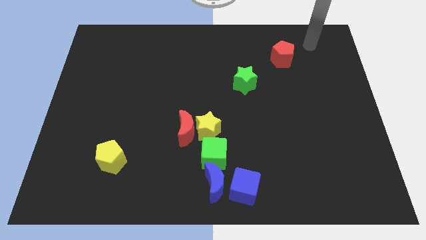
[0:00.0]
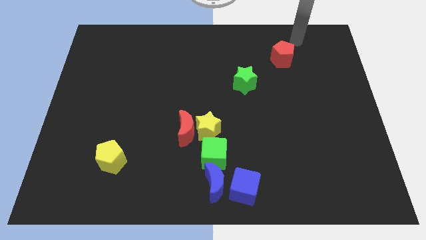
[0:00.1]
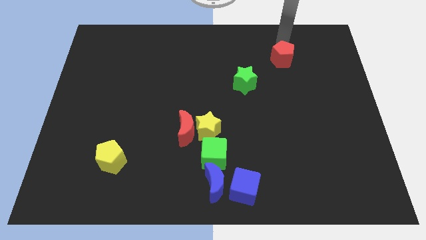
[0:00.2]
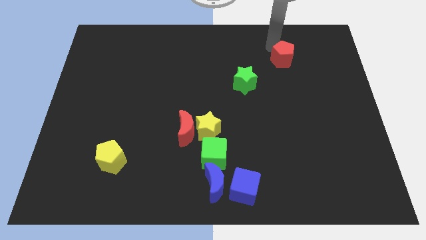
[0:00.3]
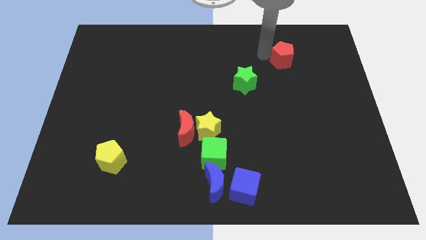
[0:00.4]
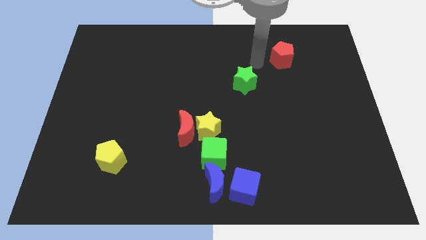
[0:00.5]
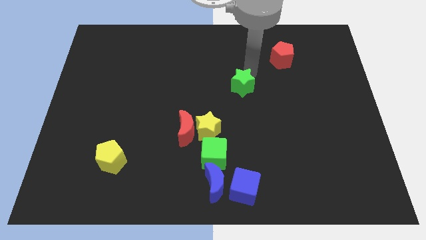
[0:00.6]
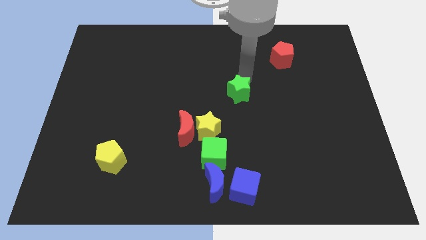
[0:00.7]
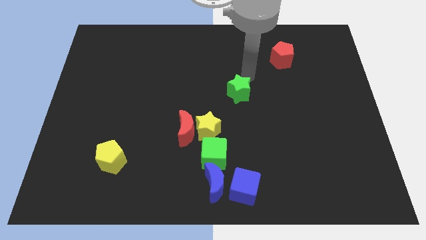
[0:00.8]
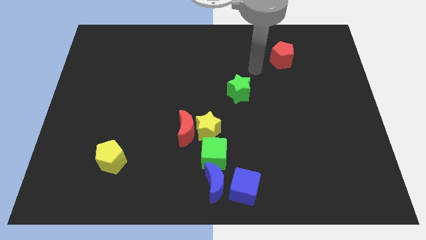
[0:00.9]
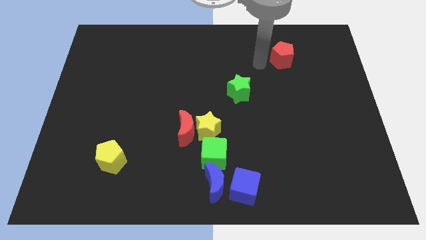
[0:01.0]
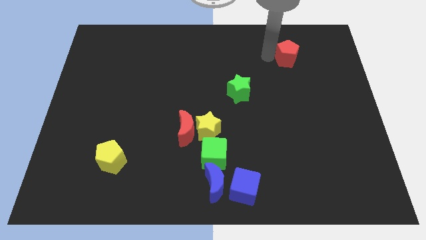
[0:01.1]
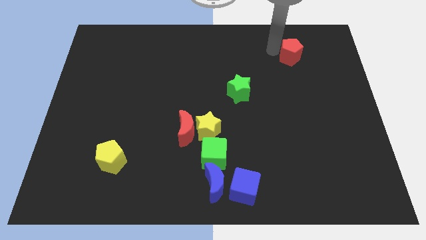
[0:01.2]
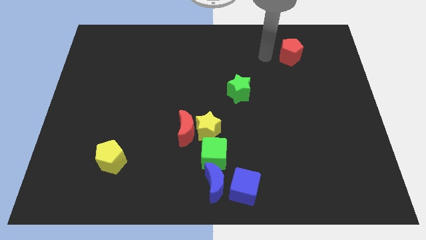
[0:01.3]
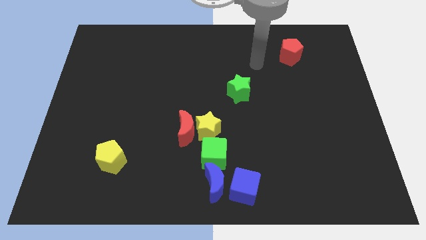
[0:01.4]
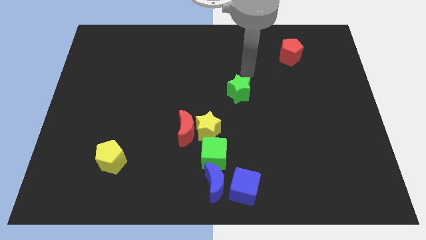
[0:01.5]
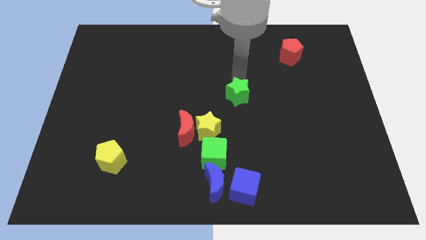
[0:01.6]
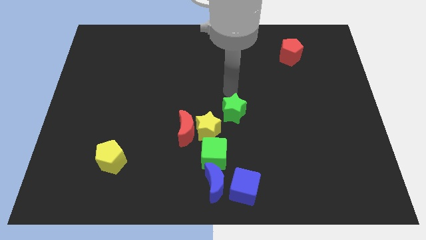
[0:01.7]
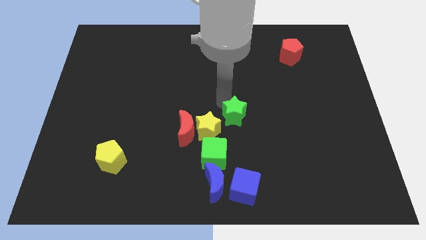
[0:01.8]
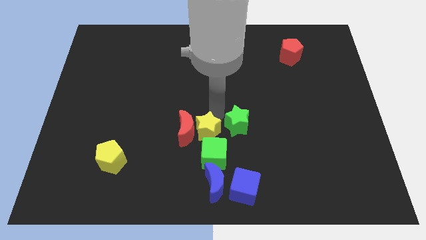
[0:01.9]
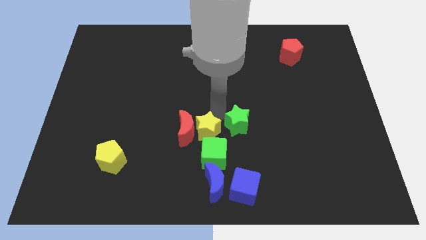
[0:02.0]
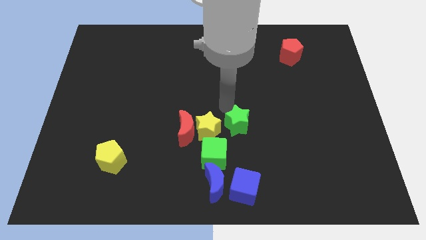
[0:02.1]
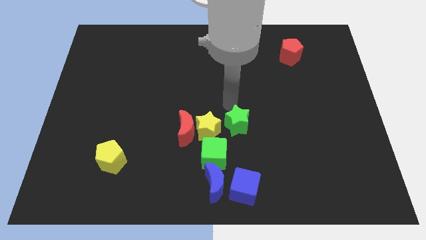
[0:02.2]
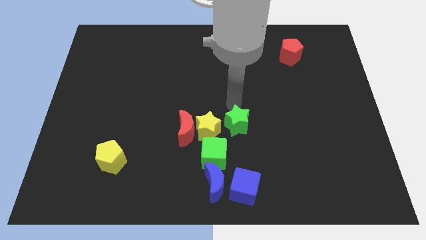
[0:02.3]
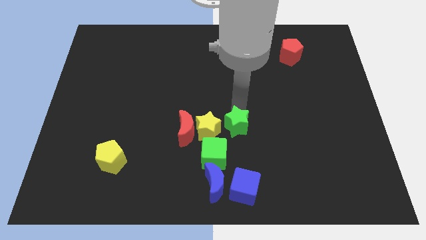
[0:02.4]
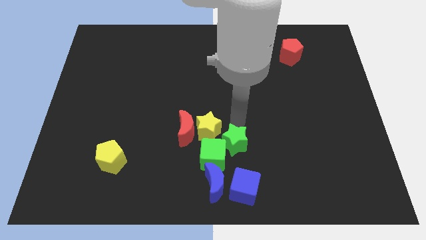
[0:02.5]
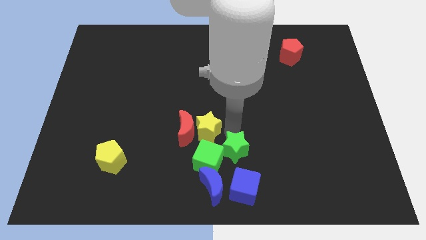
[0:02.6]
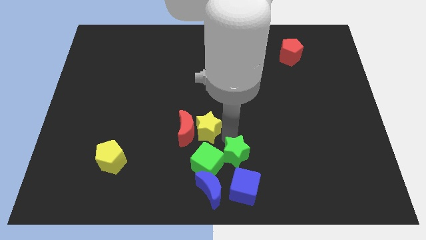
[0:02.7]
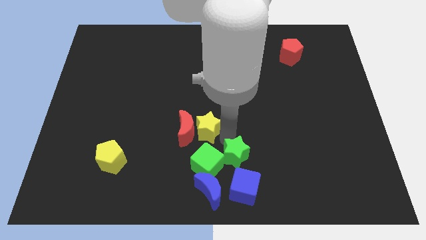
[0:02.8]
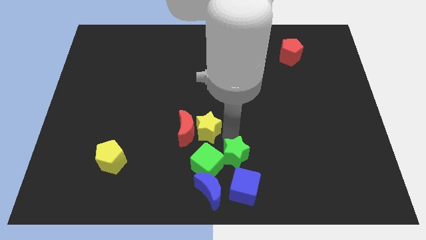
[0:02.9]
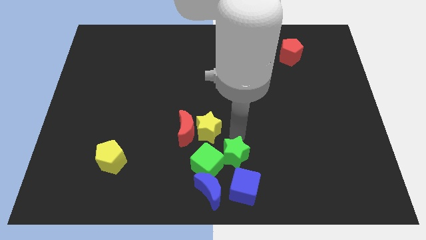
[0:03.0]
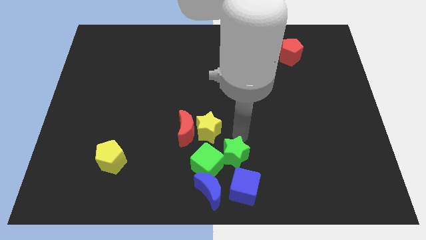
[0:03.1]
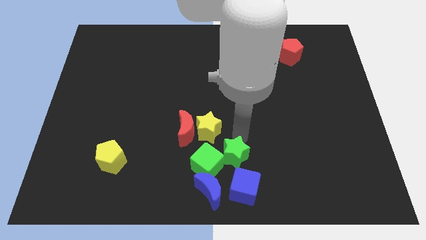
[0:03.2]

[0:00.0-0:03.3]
push the green star into the right side of the green cube

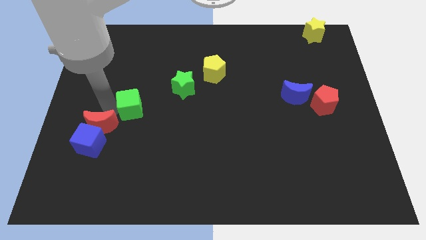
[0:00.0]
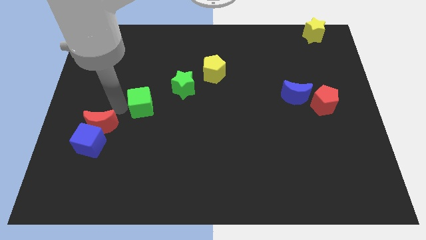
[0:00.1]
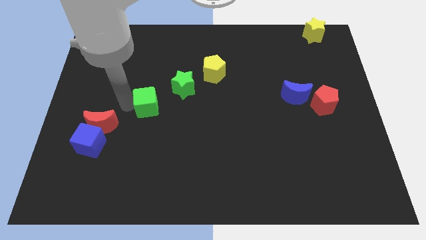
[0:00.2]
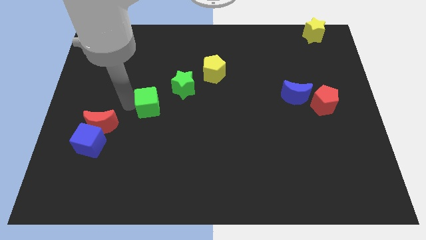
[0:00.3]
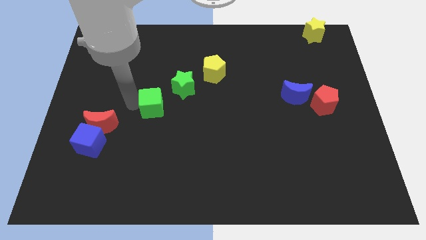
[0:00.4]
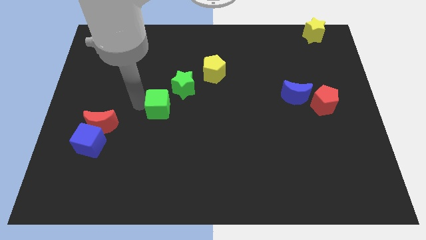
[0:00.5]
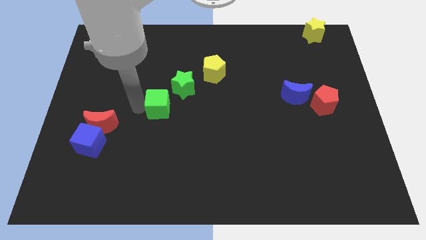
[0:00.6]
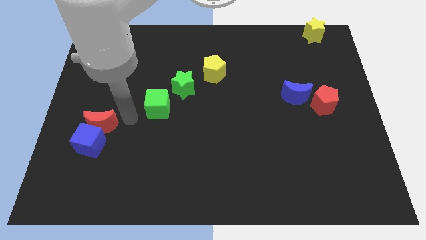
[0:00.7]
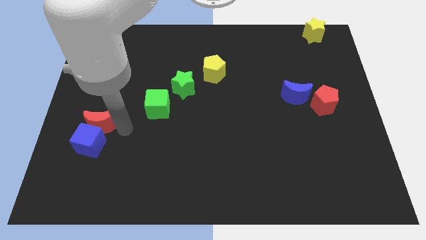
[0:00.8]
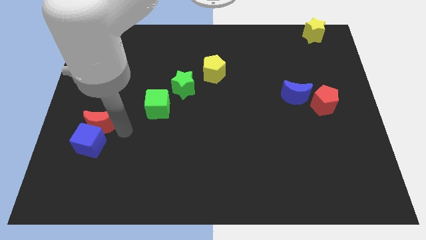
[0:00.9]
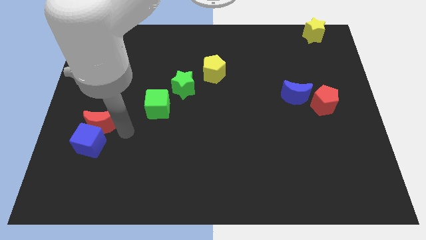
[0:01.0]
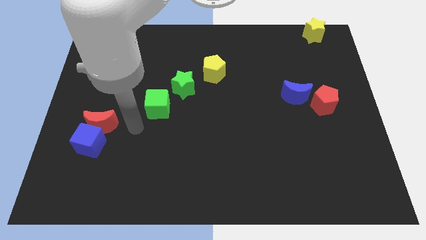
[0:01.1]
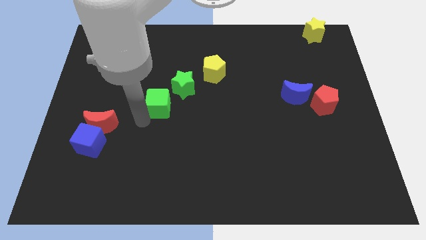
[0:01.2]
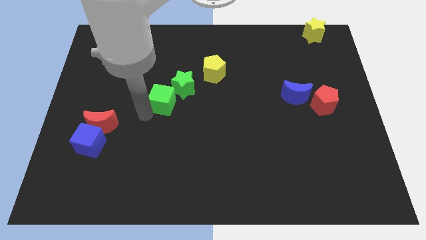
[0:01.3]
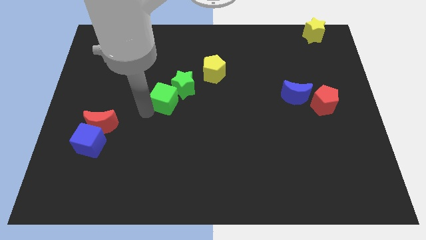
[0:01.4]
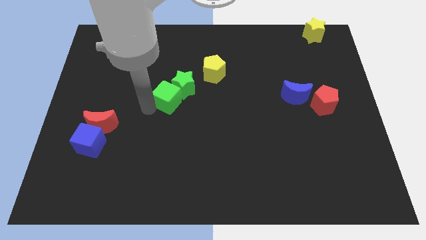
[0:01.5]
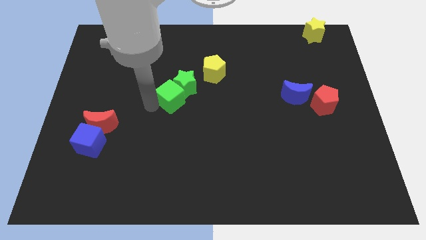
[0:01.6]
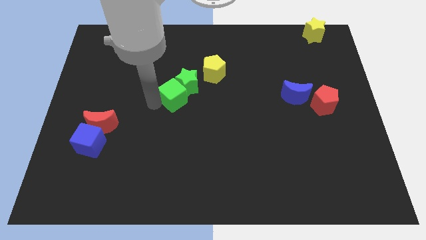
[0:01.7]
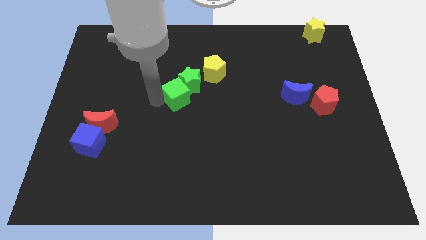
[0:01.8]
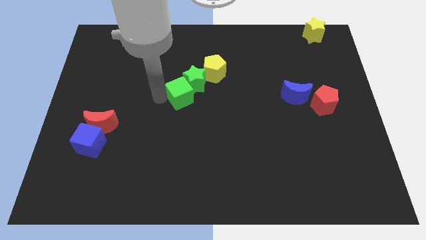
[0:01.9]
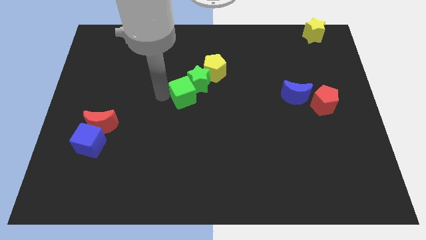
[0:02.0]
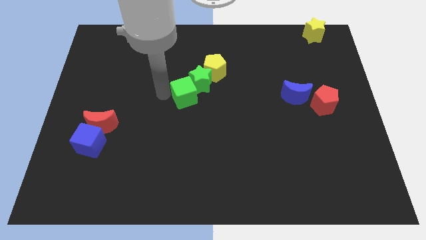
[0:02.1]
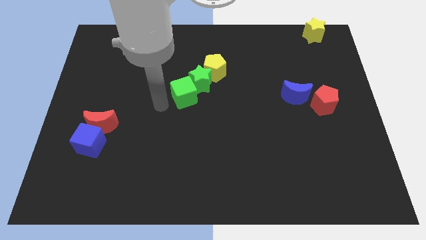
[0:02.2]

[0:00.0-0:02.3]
push the group of green blocks into the yellow pentagon

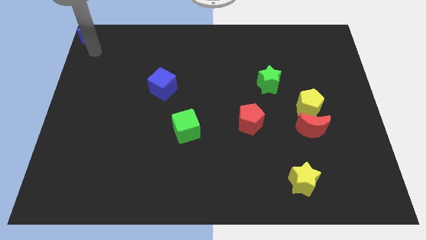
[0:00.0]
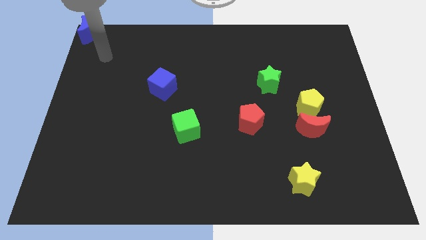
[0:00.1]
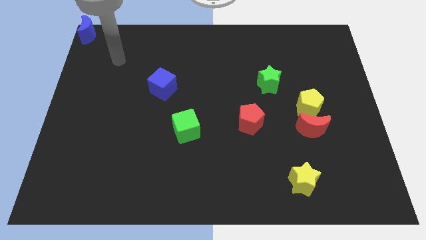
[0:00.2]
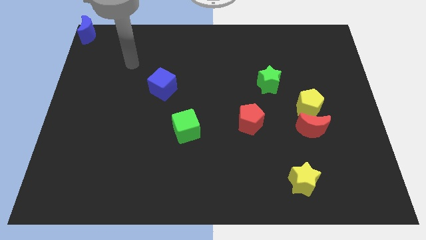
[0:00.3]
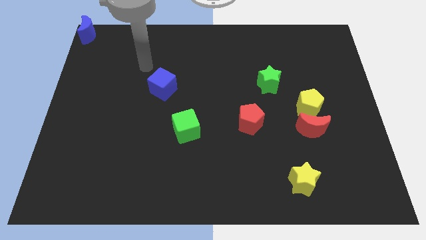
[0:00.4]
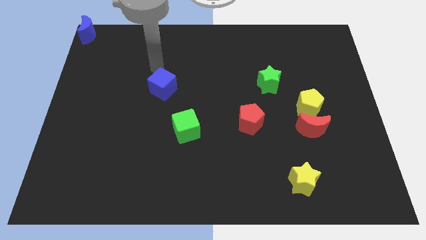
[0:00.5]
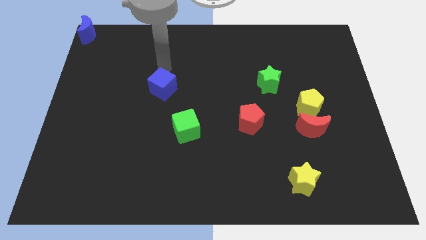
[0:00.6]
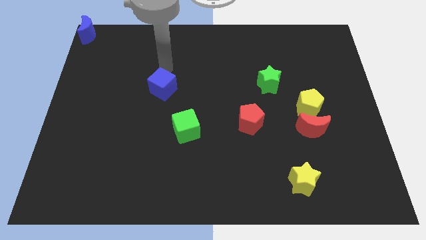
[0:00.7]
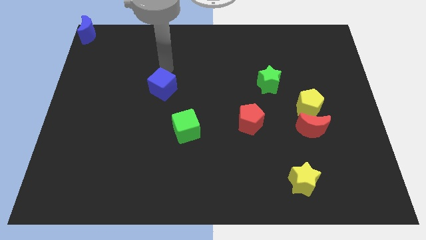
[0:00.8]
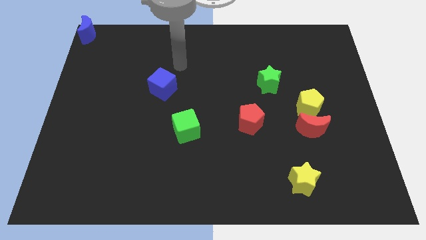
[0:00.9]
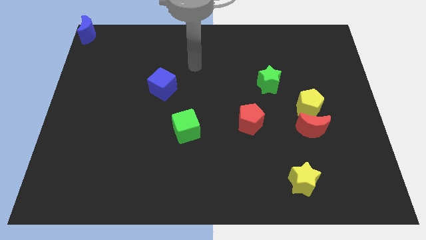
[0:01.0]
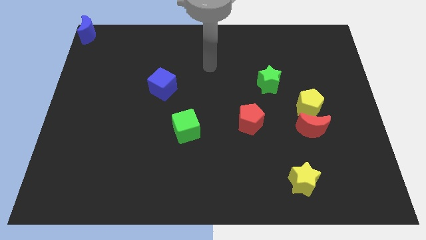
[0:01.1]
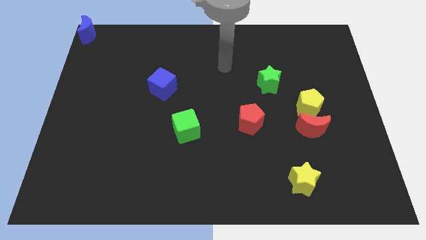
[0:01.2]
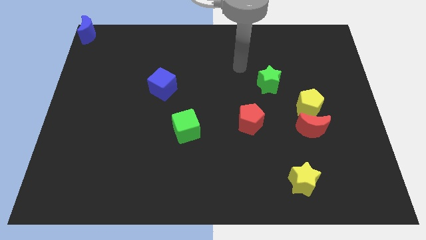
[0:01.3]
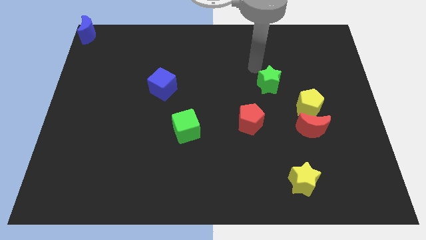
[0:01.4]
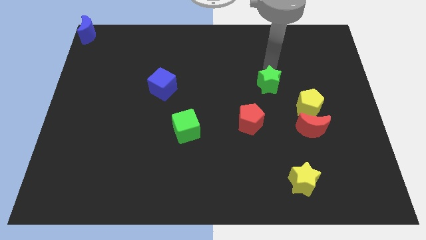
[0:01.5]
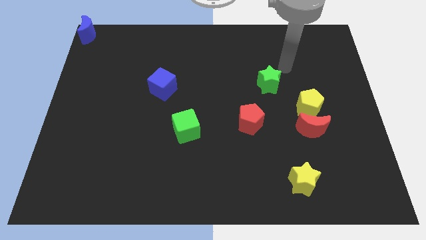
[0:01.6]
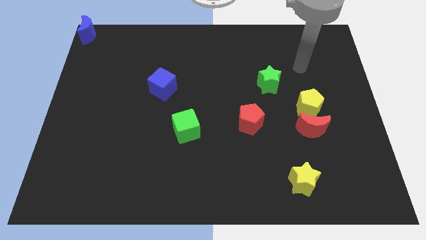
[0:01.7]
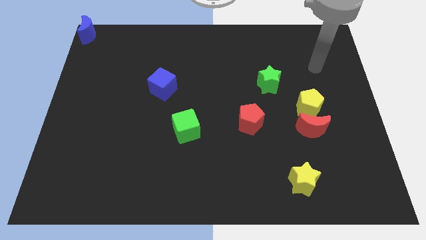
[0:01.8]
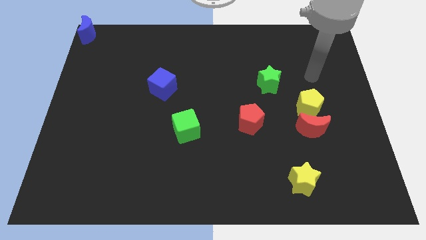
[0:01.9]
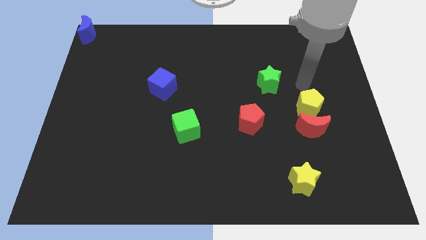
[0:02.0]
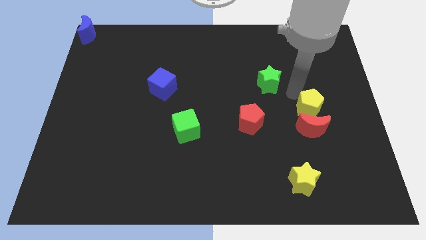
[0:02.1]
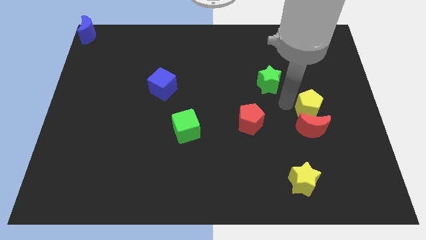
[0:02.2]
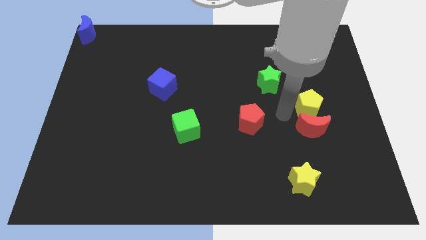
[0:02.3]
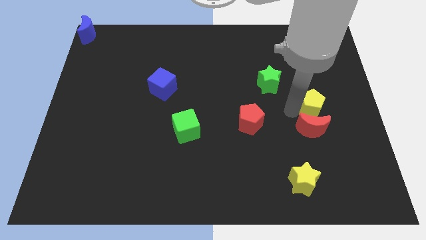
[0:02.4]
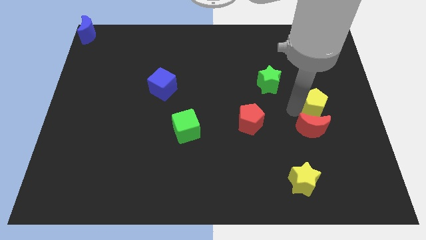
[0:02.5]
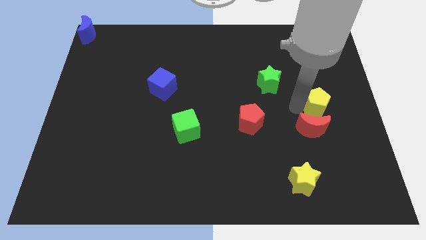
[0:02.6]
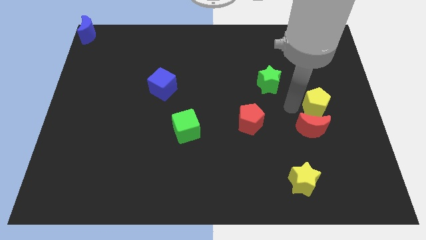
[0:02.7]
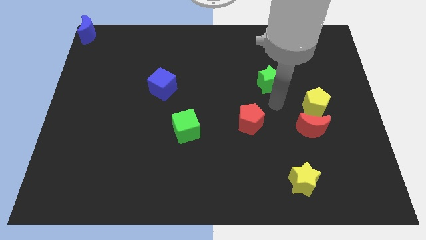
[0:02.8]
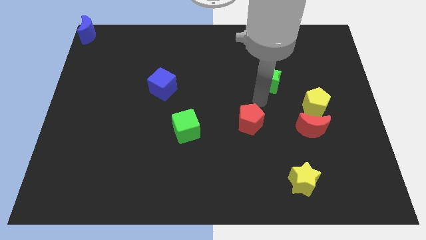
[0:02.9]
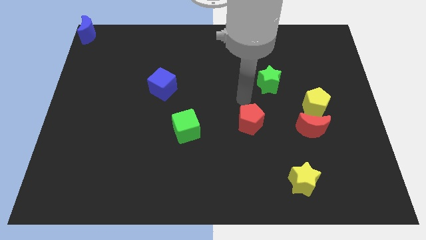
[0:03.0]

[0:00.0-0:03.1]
slide yellow pentagon slightly to the right

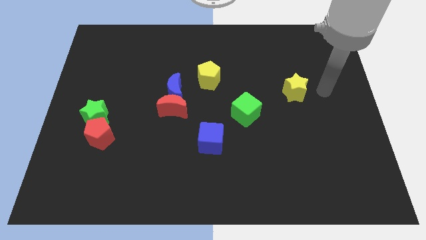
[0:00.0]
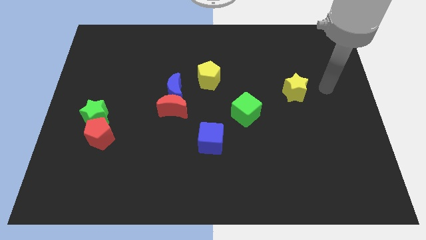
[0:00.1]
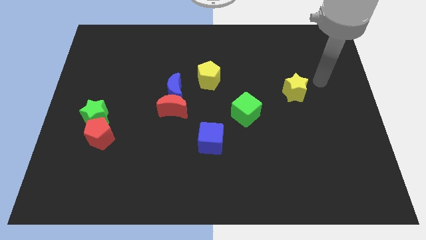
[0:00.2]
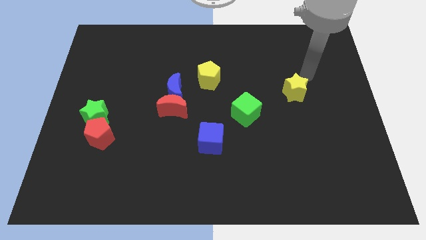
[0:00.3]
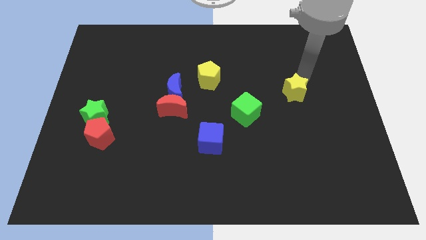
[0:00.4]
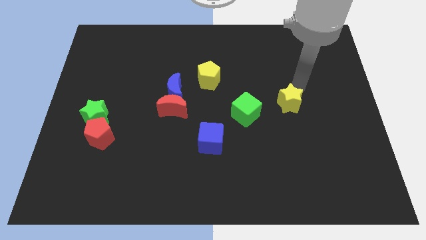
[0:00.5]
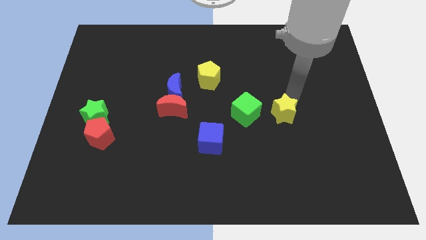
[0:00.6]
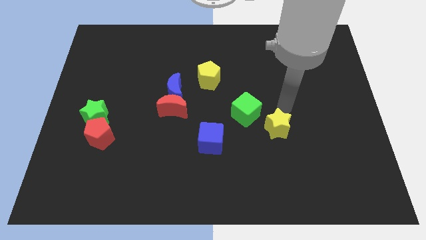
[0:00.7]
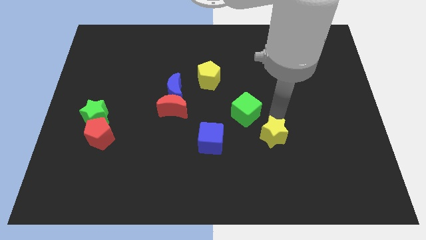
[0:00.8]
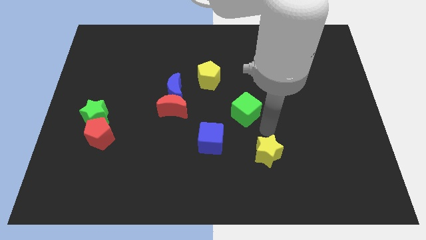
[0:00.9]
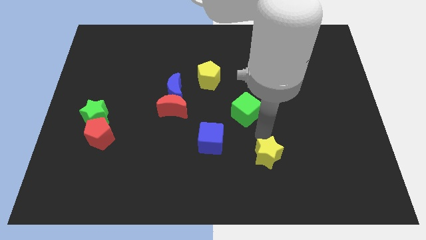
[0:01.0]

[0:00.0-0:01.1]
place the yellow star right to the blue cube
